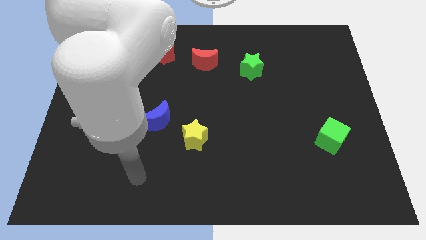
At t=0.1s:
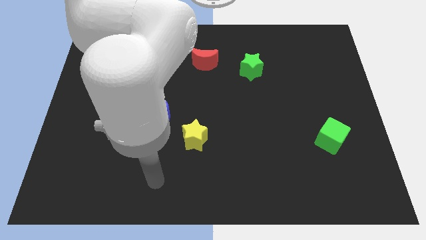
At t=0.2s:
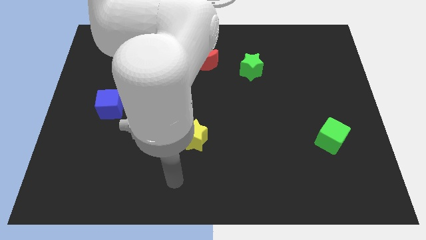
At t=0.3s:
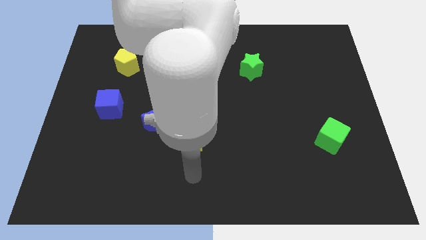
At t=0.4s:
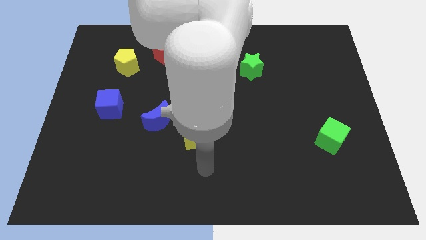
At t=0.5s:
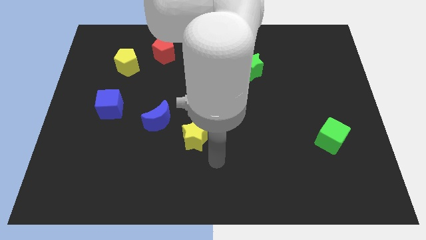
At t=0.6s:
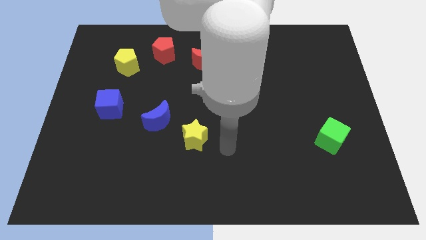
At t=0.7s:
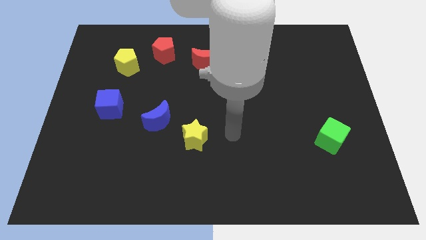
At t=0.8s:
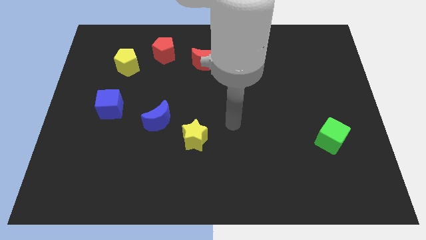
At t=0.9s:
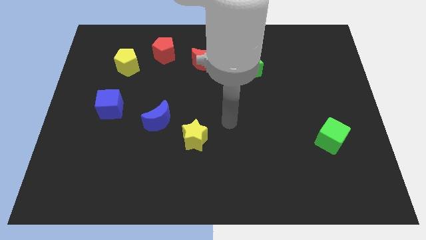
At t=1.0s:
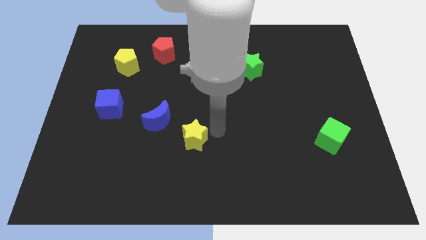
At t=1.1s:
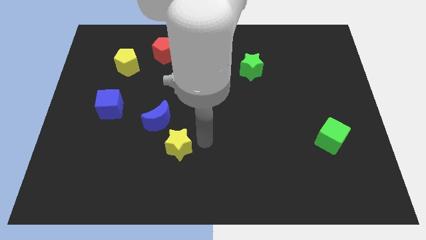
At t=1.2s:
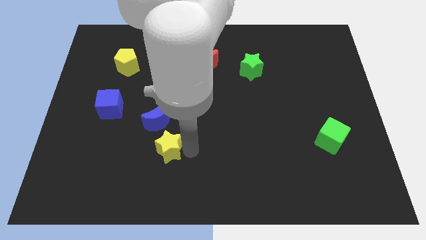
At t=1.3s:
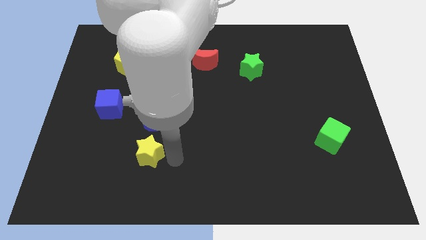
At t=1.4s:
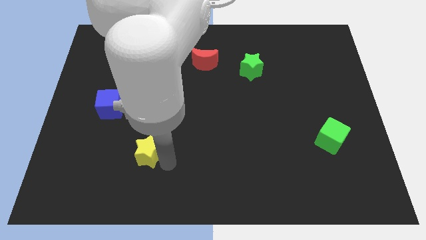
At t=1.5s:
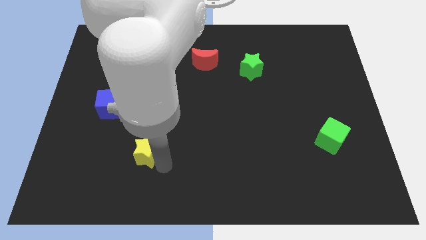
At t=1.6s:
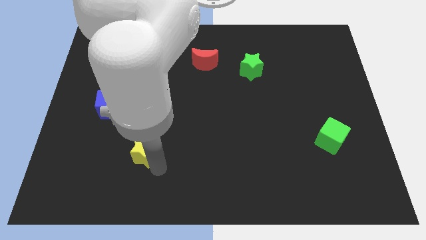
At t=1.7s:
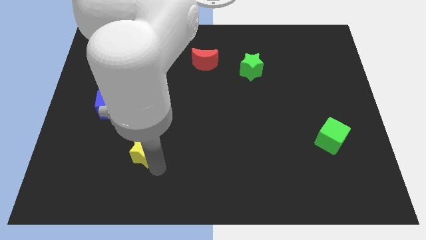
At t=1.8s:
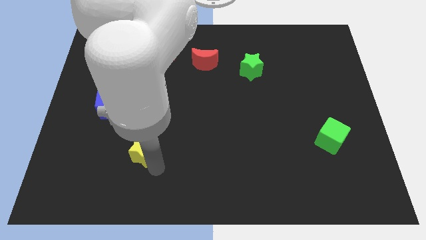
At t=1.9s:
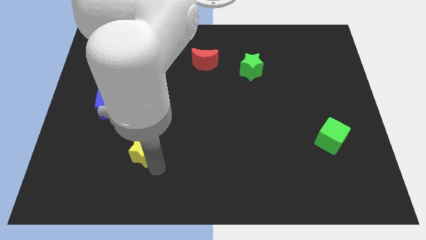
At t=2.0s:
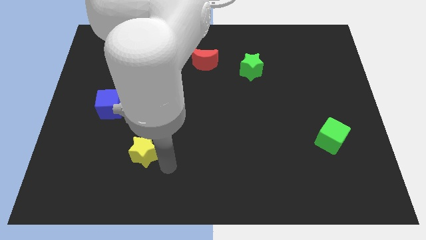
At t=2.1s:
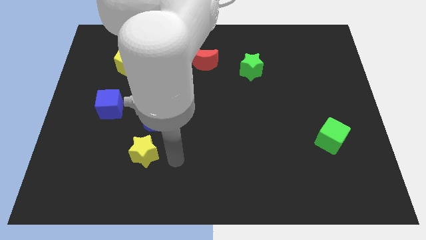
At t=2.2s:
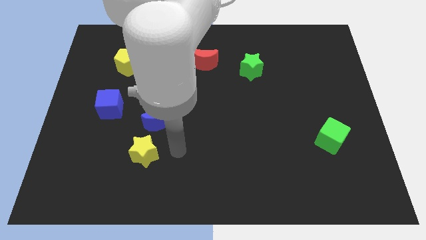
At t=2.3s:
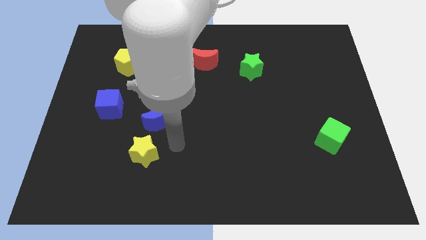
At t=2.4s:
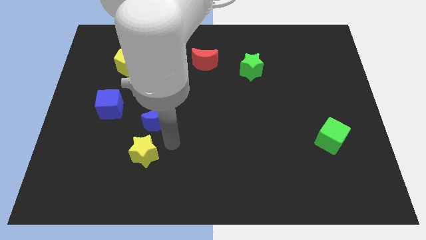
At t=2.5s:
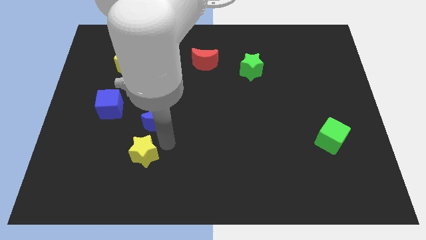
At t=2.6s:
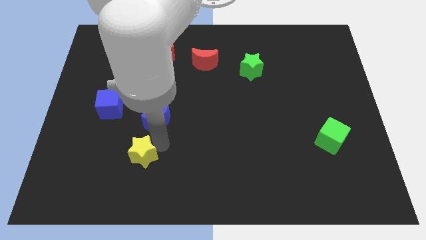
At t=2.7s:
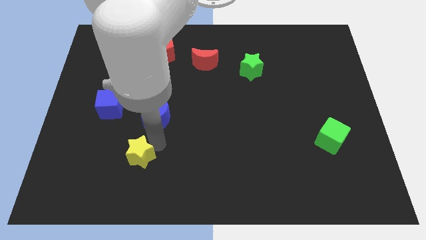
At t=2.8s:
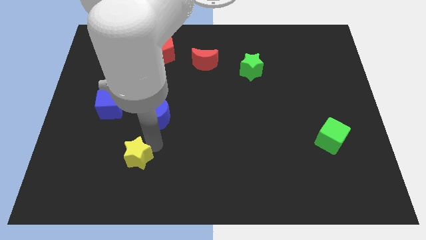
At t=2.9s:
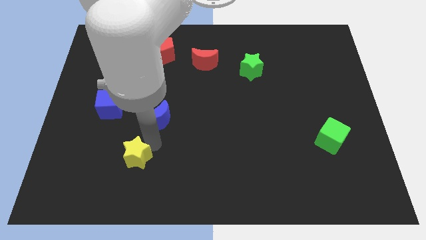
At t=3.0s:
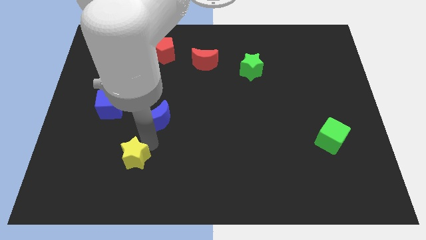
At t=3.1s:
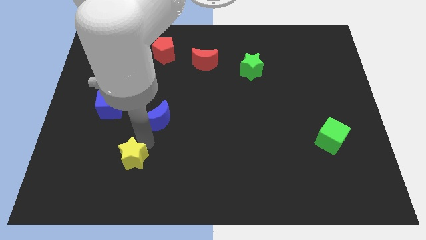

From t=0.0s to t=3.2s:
place the yellow star vertically below the blue moon

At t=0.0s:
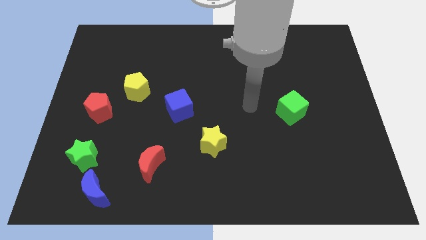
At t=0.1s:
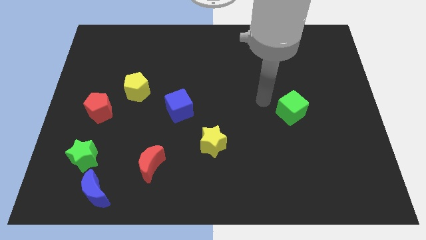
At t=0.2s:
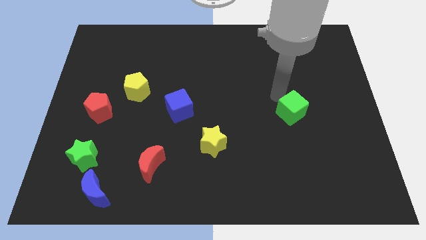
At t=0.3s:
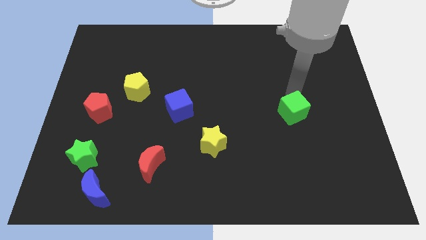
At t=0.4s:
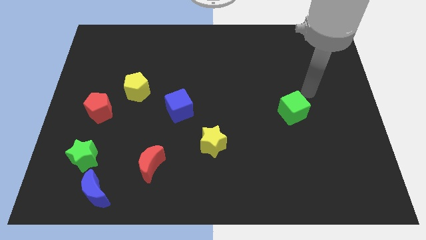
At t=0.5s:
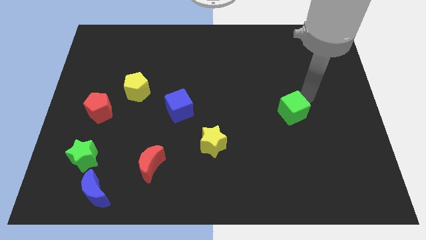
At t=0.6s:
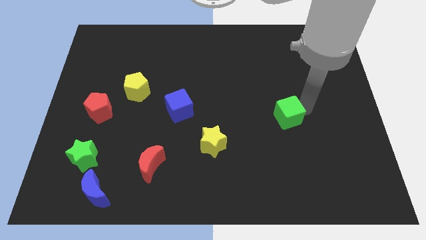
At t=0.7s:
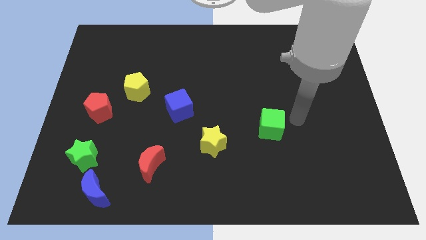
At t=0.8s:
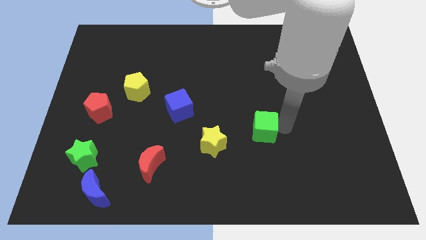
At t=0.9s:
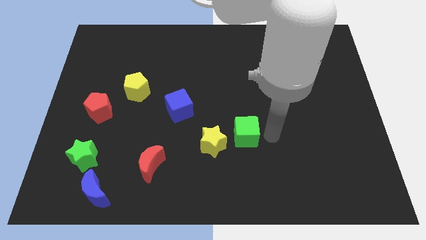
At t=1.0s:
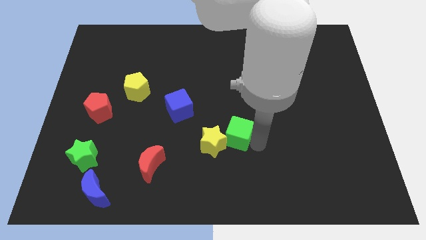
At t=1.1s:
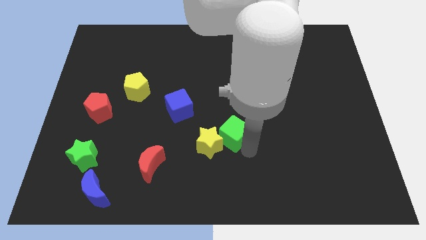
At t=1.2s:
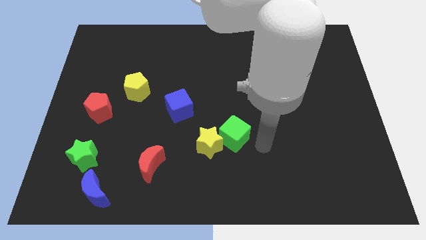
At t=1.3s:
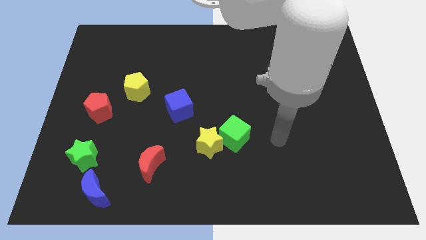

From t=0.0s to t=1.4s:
slide green cube to the right of the yellow star

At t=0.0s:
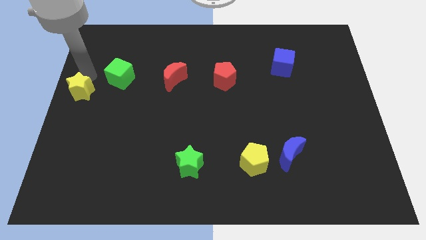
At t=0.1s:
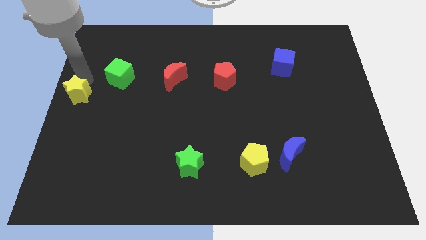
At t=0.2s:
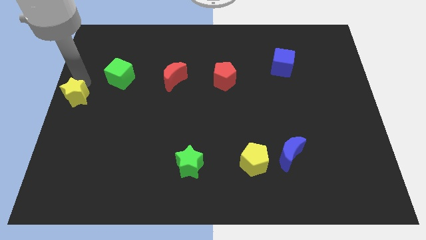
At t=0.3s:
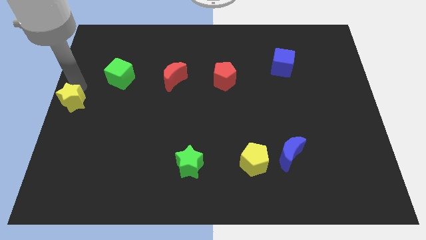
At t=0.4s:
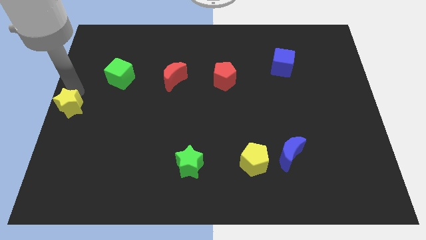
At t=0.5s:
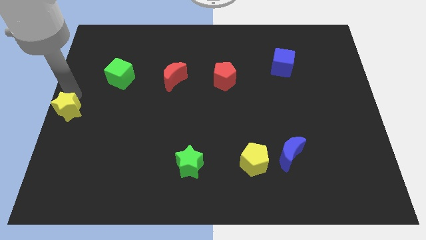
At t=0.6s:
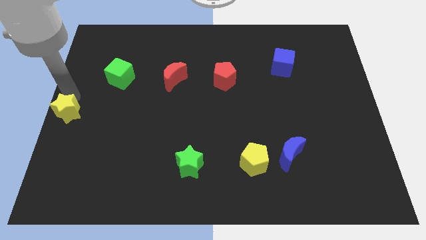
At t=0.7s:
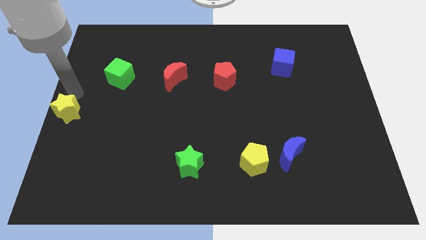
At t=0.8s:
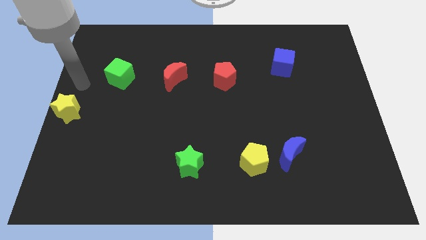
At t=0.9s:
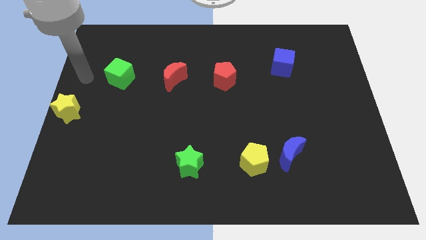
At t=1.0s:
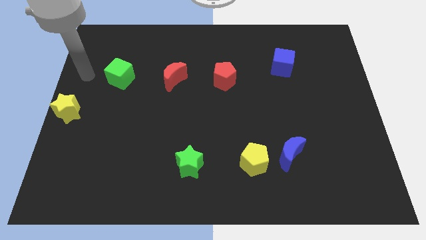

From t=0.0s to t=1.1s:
push the yellow star towards the bottom left

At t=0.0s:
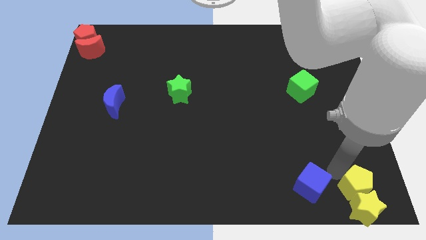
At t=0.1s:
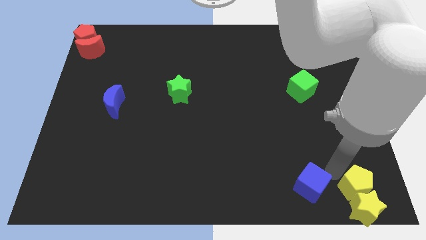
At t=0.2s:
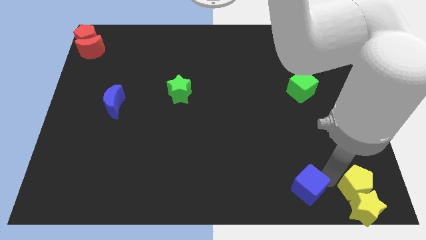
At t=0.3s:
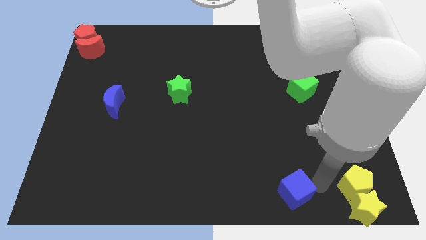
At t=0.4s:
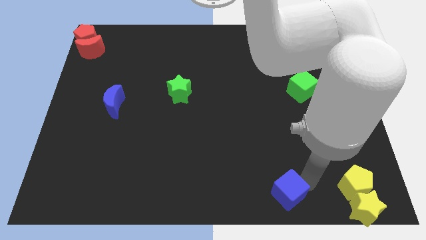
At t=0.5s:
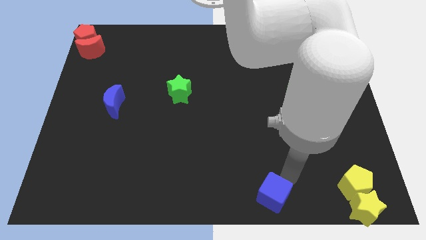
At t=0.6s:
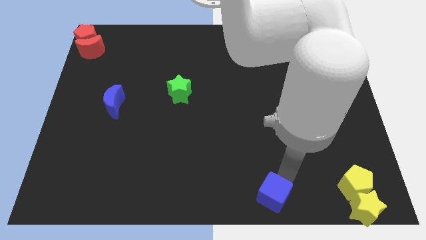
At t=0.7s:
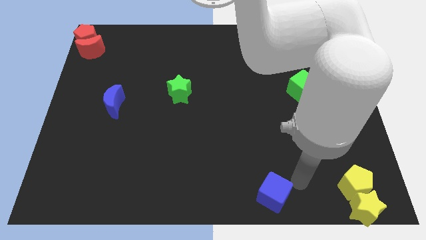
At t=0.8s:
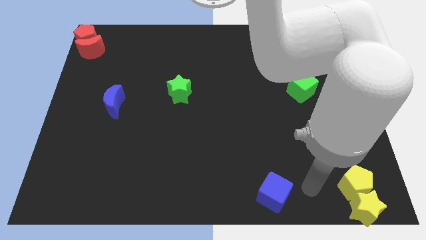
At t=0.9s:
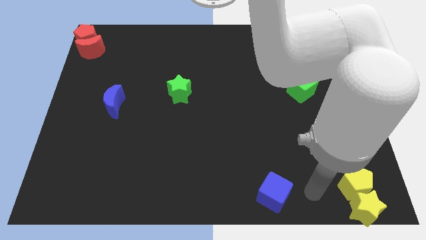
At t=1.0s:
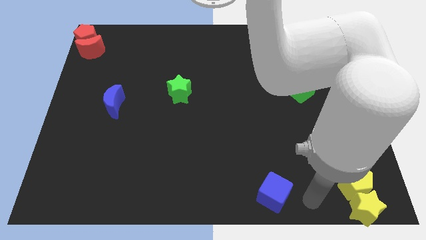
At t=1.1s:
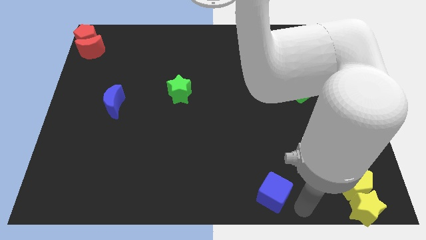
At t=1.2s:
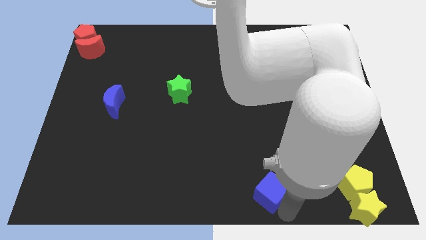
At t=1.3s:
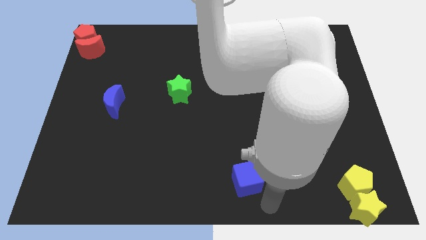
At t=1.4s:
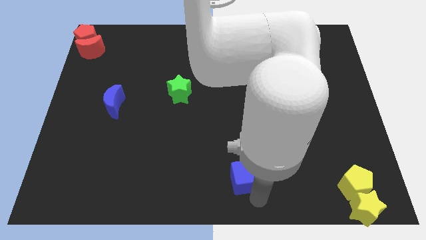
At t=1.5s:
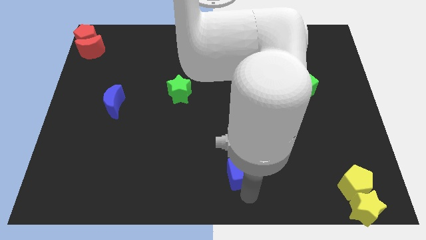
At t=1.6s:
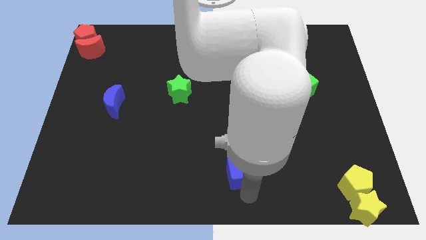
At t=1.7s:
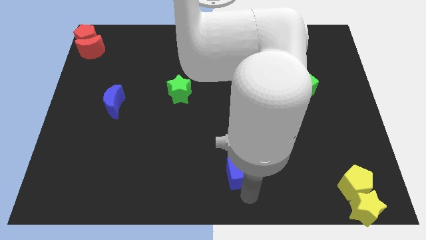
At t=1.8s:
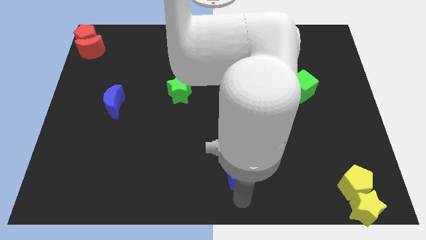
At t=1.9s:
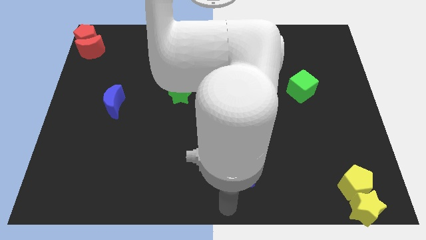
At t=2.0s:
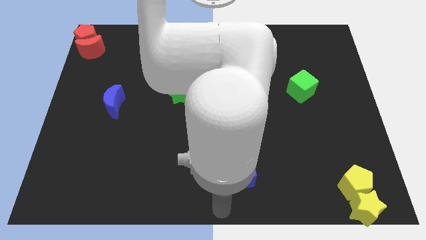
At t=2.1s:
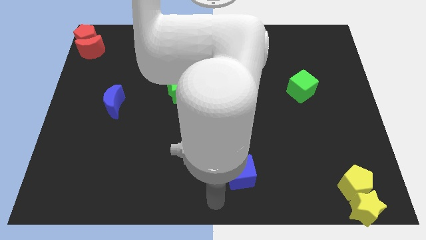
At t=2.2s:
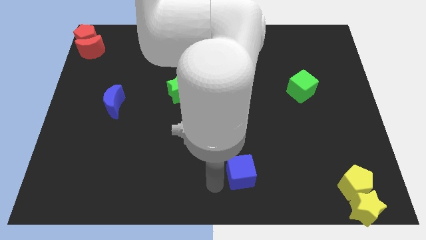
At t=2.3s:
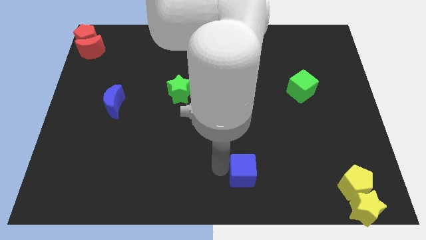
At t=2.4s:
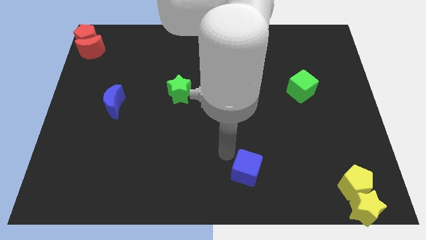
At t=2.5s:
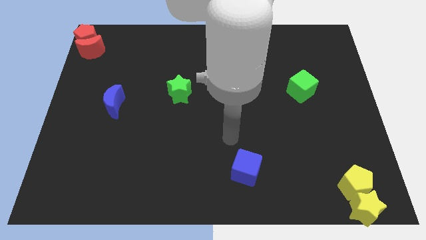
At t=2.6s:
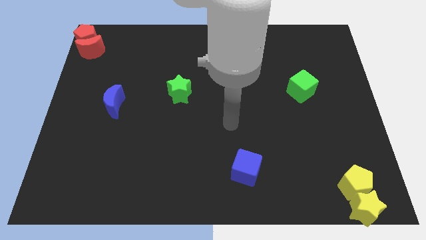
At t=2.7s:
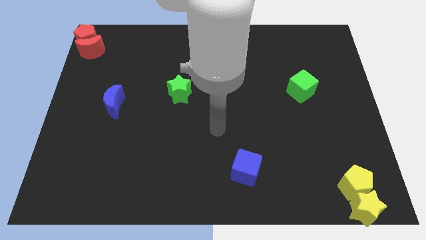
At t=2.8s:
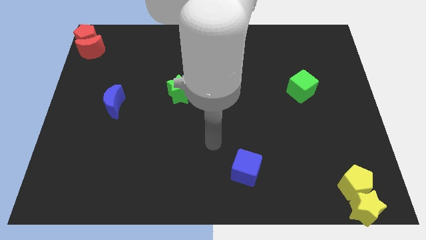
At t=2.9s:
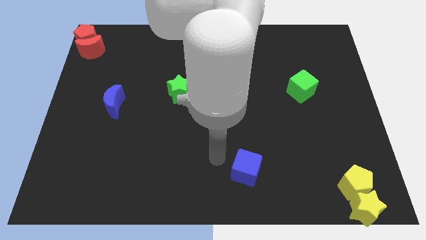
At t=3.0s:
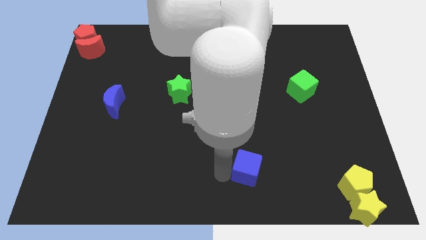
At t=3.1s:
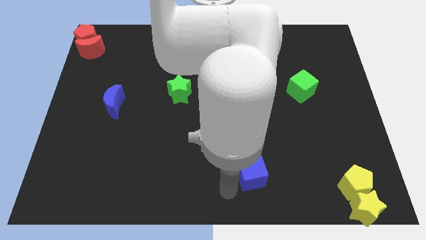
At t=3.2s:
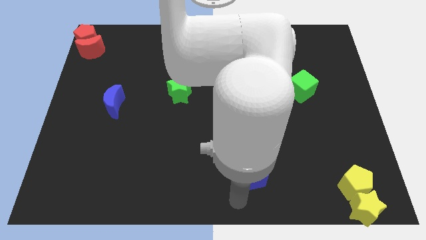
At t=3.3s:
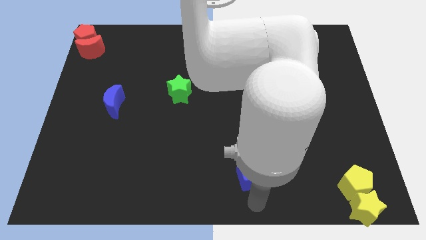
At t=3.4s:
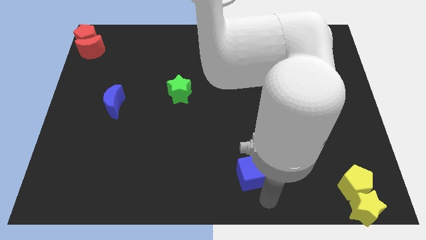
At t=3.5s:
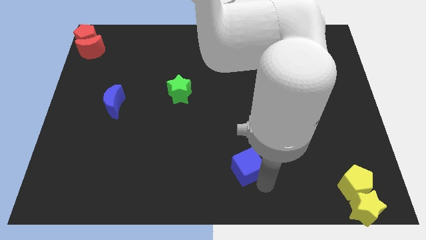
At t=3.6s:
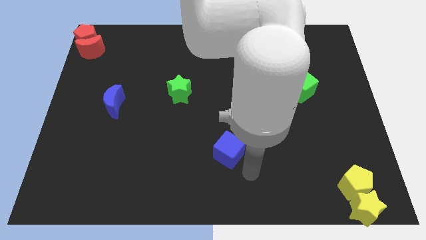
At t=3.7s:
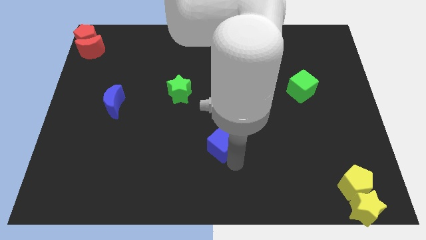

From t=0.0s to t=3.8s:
push the blue cube to the center of the board
